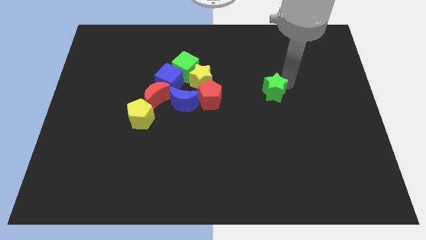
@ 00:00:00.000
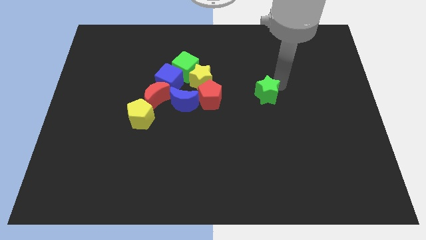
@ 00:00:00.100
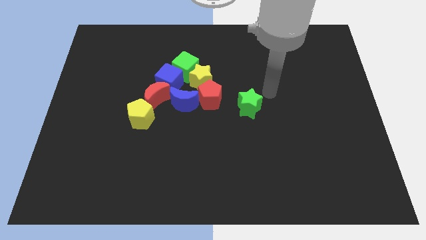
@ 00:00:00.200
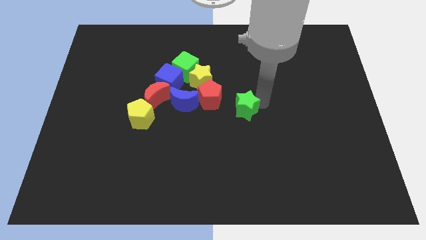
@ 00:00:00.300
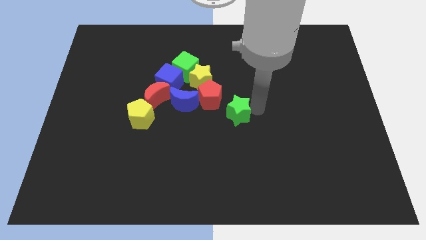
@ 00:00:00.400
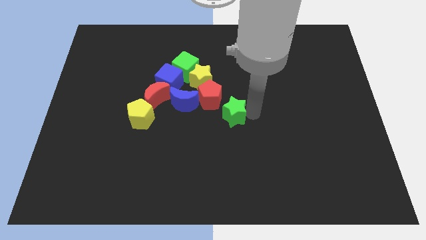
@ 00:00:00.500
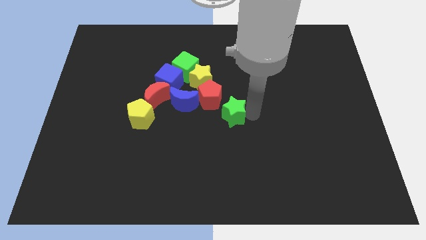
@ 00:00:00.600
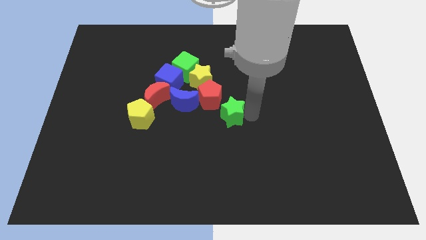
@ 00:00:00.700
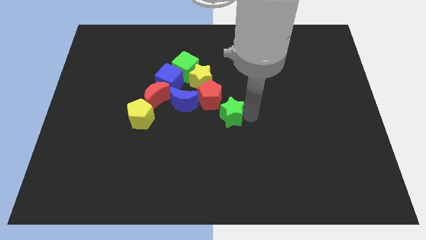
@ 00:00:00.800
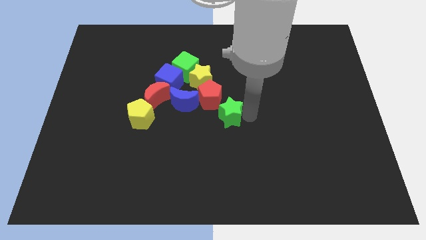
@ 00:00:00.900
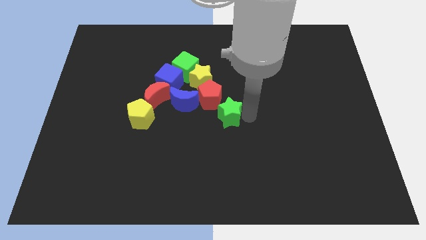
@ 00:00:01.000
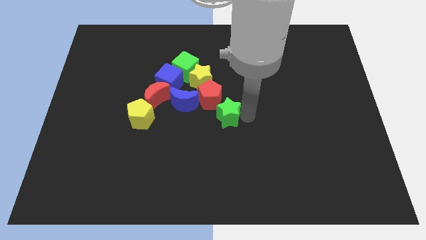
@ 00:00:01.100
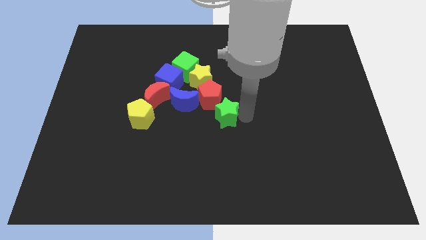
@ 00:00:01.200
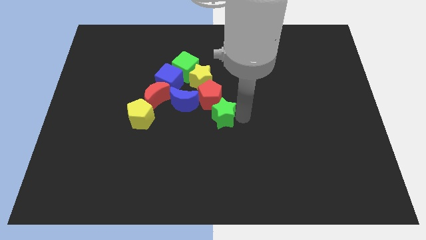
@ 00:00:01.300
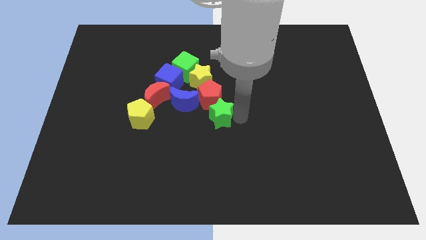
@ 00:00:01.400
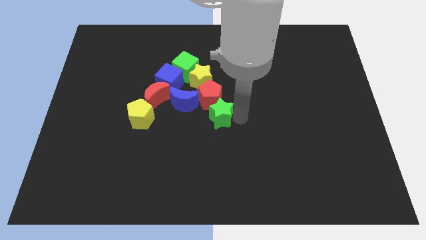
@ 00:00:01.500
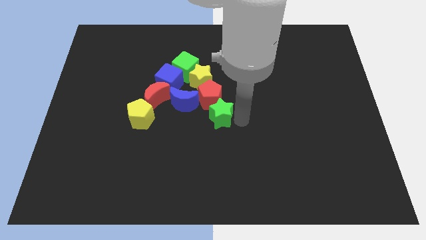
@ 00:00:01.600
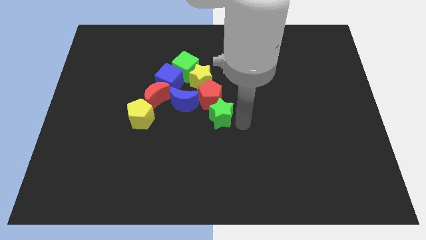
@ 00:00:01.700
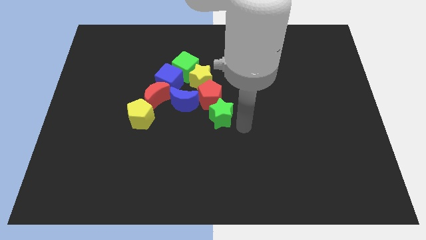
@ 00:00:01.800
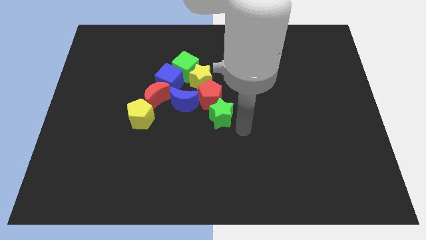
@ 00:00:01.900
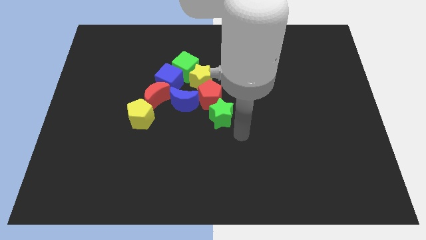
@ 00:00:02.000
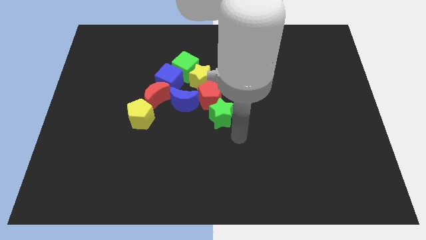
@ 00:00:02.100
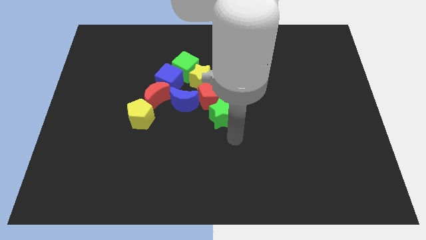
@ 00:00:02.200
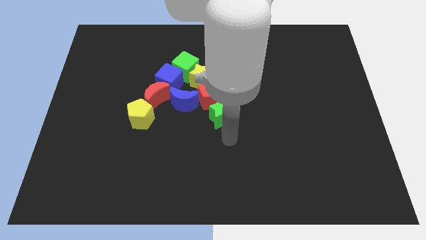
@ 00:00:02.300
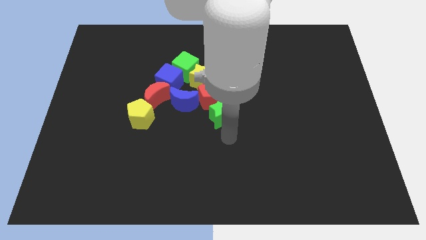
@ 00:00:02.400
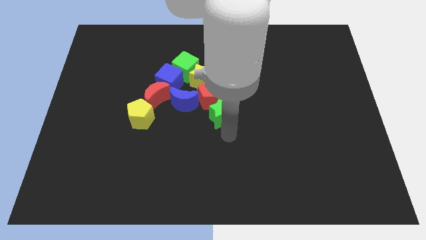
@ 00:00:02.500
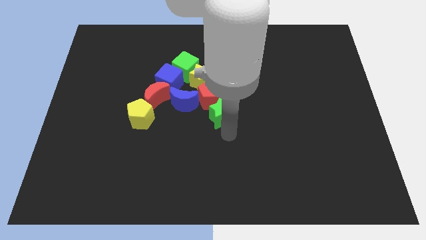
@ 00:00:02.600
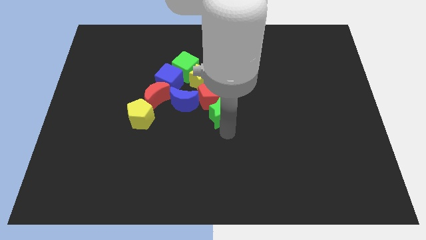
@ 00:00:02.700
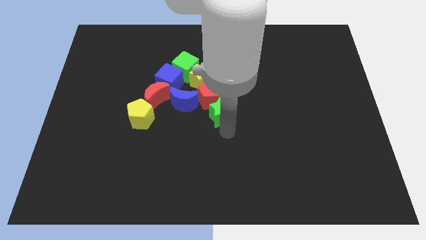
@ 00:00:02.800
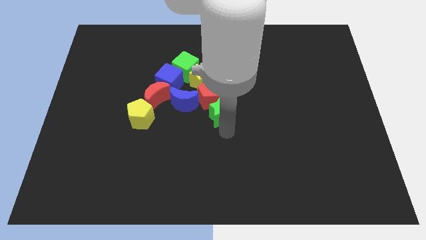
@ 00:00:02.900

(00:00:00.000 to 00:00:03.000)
push the green star bottom right to the red pentagon

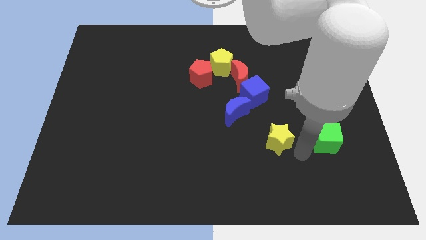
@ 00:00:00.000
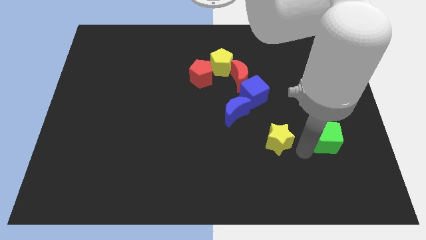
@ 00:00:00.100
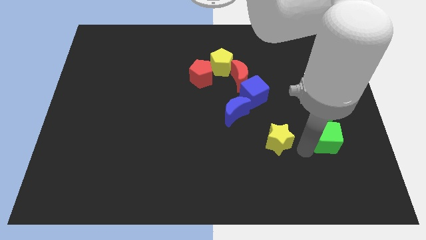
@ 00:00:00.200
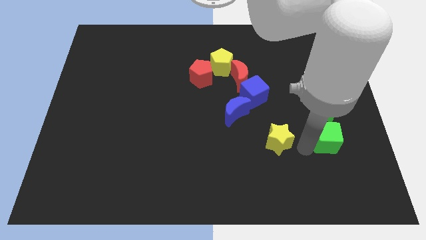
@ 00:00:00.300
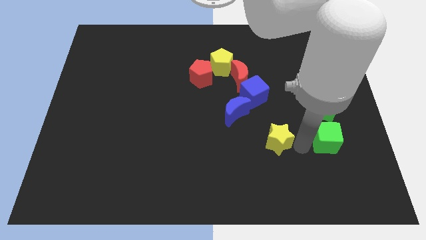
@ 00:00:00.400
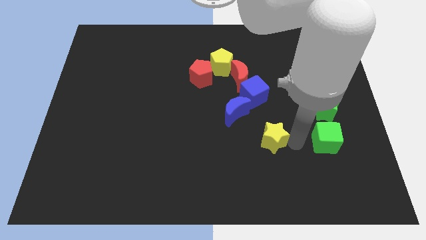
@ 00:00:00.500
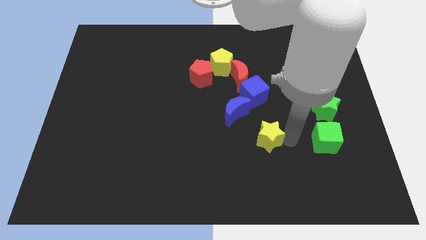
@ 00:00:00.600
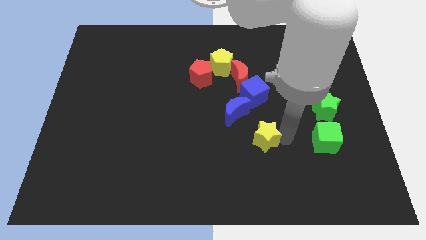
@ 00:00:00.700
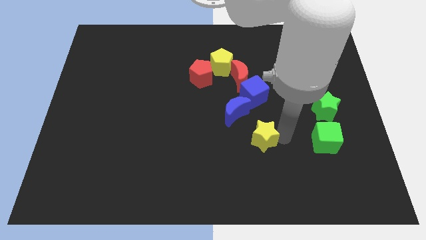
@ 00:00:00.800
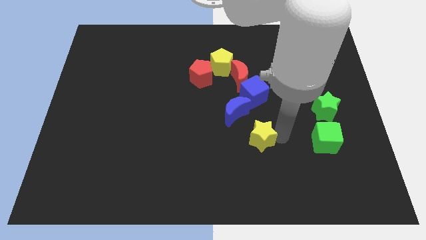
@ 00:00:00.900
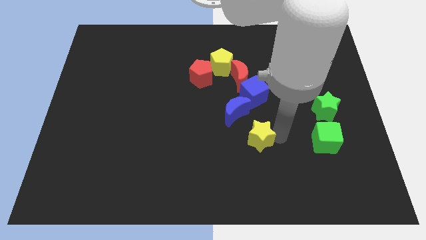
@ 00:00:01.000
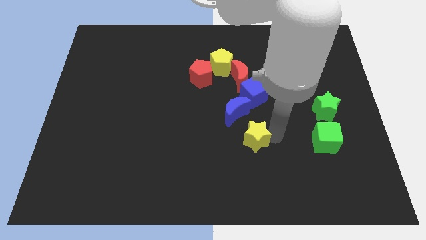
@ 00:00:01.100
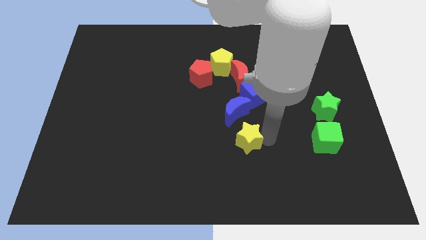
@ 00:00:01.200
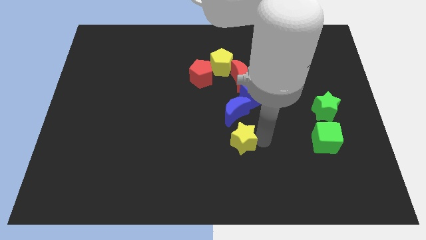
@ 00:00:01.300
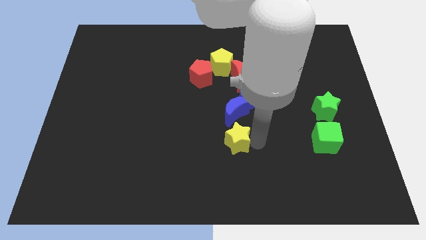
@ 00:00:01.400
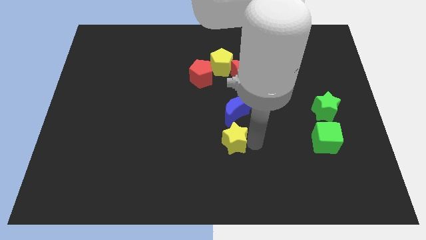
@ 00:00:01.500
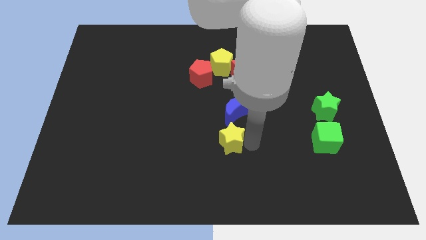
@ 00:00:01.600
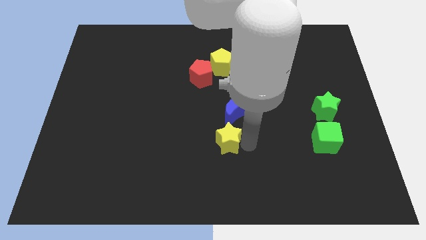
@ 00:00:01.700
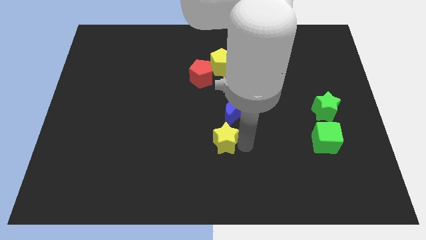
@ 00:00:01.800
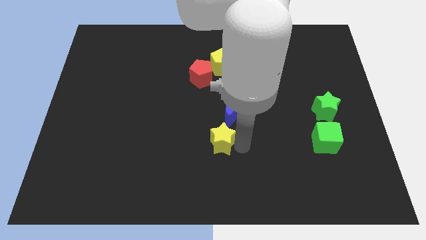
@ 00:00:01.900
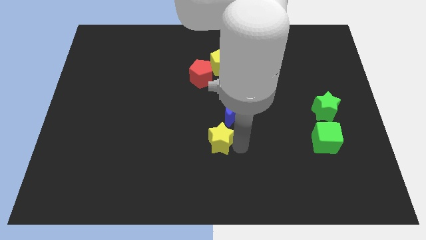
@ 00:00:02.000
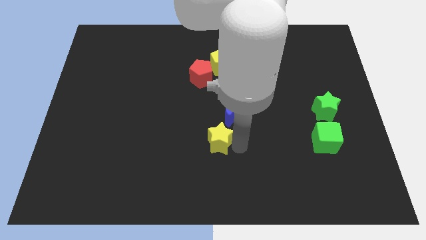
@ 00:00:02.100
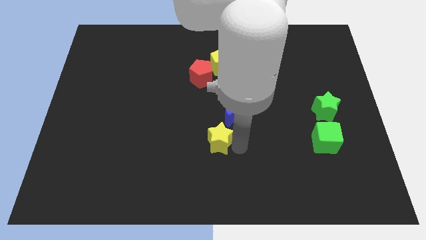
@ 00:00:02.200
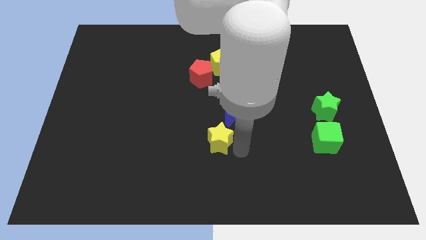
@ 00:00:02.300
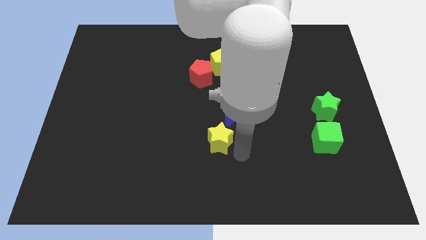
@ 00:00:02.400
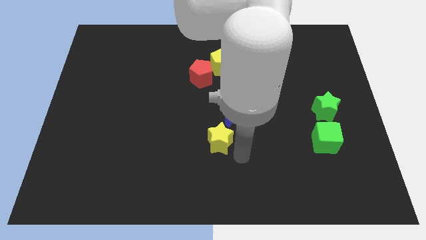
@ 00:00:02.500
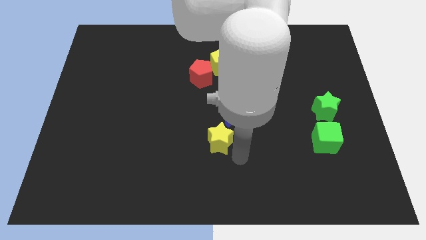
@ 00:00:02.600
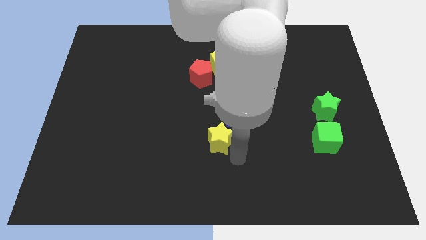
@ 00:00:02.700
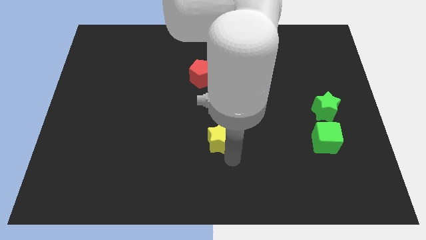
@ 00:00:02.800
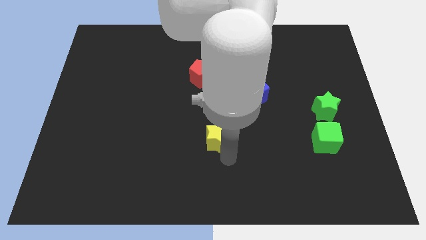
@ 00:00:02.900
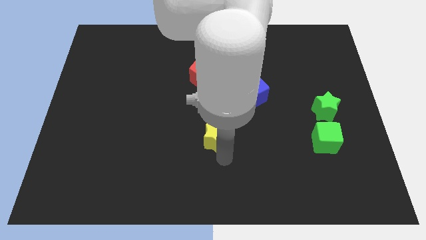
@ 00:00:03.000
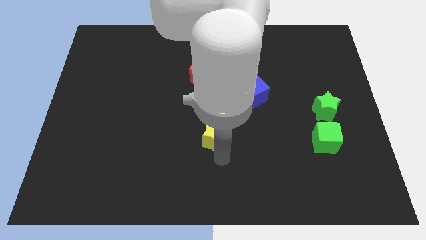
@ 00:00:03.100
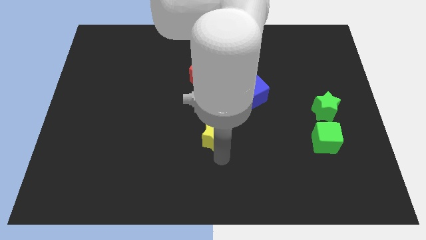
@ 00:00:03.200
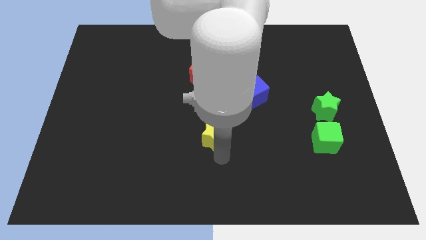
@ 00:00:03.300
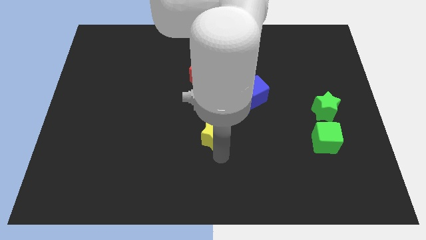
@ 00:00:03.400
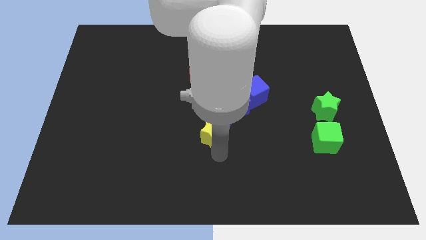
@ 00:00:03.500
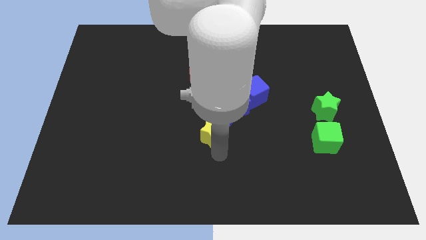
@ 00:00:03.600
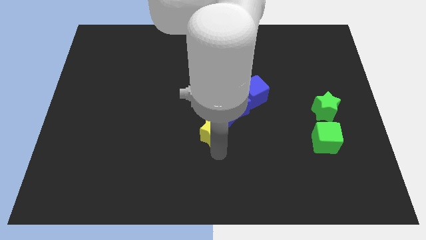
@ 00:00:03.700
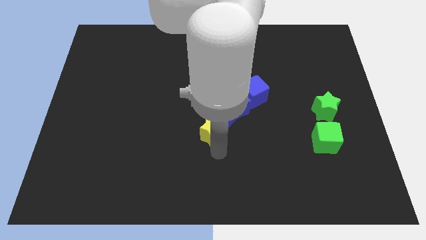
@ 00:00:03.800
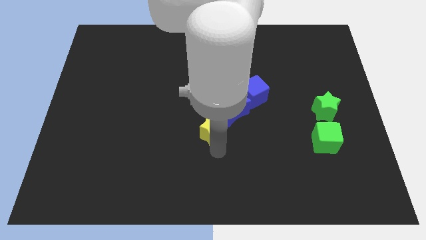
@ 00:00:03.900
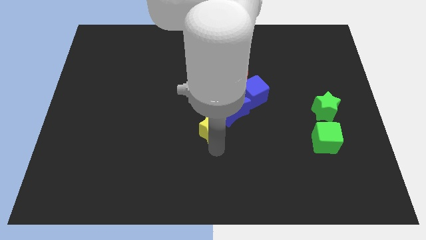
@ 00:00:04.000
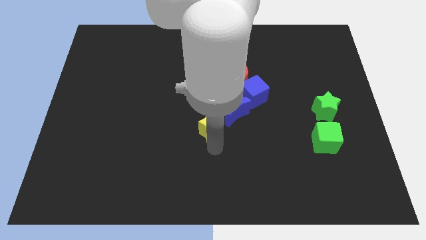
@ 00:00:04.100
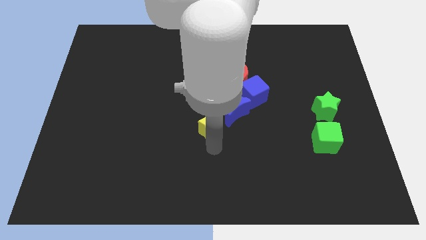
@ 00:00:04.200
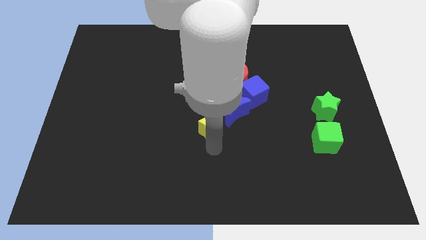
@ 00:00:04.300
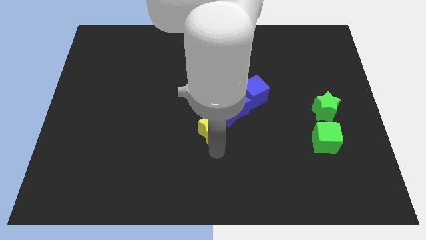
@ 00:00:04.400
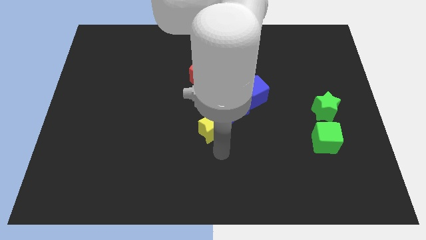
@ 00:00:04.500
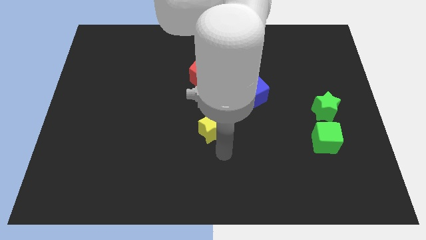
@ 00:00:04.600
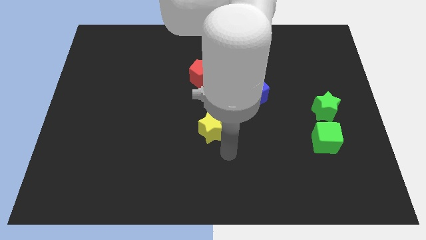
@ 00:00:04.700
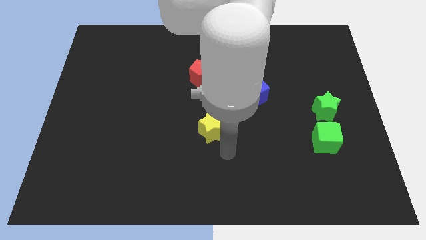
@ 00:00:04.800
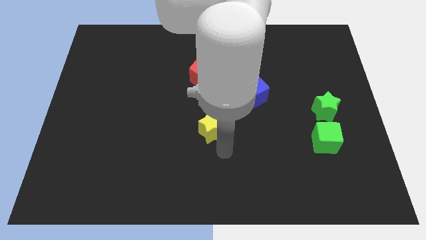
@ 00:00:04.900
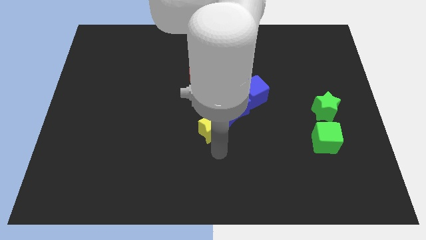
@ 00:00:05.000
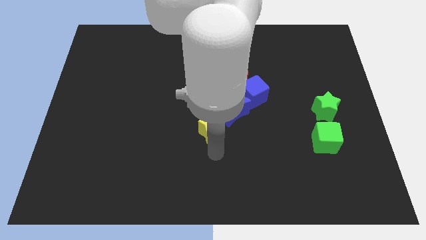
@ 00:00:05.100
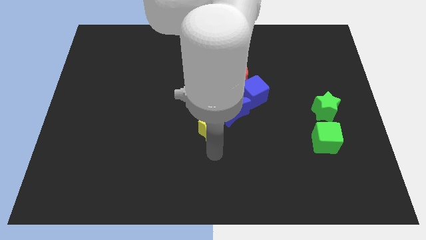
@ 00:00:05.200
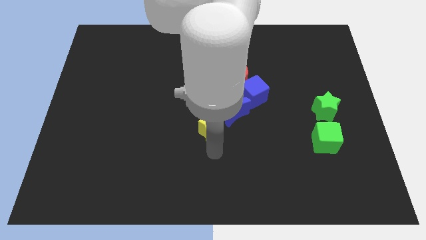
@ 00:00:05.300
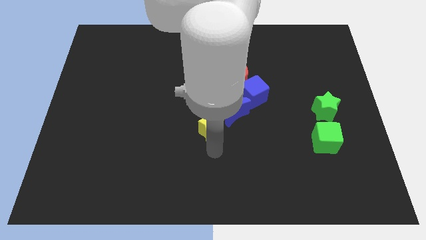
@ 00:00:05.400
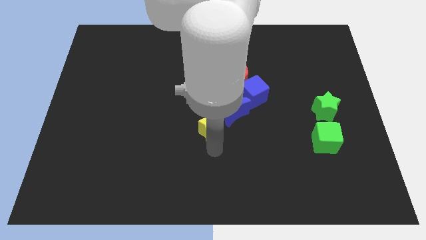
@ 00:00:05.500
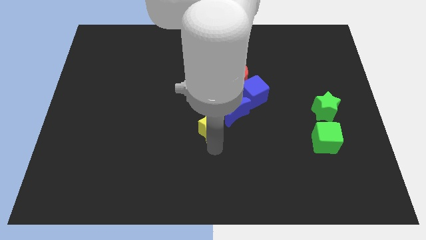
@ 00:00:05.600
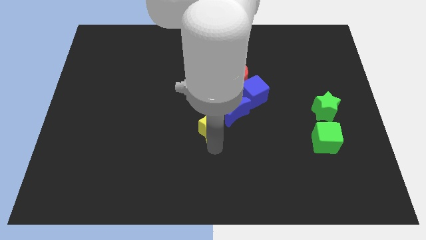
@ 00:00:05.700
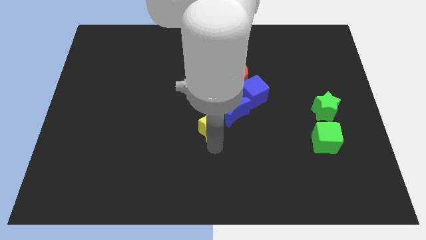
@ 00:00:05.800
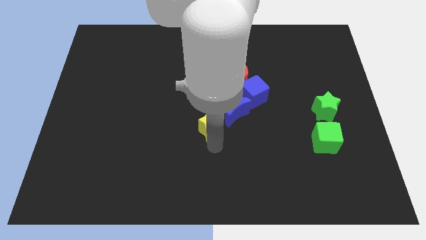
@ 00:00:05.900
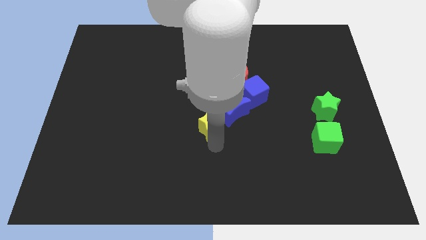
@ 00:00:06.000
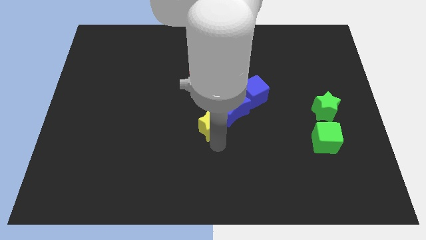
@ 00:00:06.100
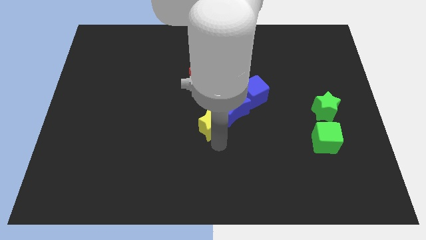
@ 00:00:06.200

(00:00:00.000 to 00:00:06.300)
move the yellow star to the left of the blue crescent in the diagonal position
